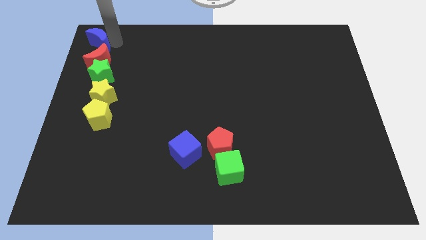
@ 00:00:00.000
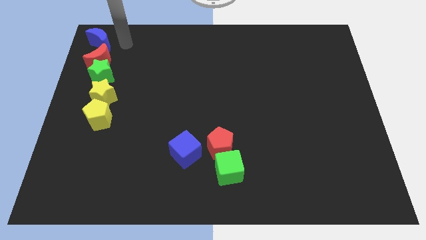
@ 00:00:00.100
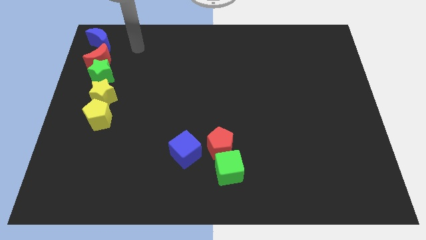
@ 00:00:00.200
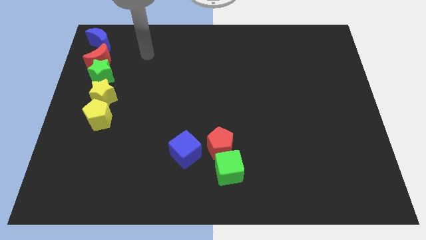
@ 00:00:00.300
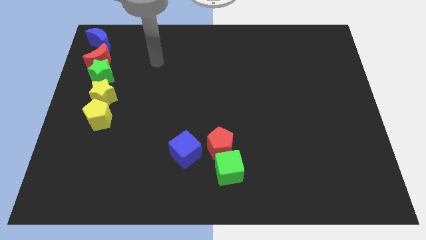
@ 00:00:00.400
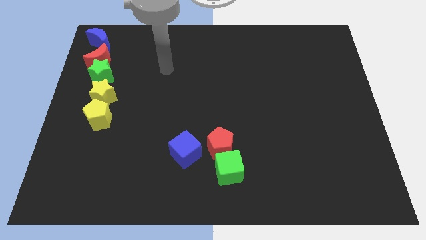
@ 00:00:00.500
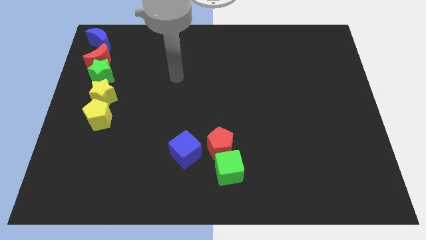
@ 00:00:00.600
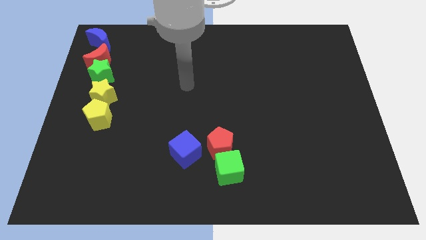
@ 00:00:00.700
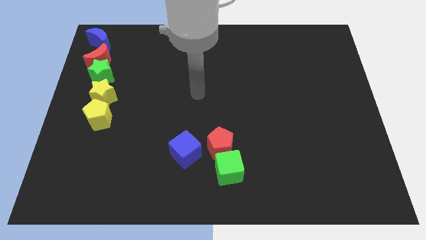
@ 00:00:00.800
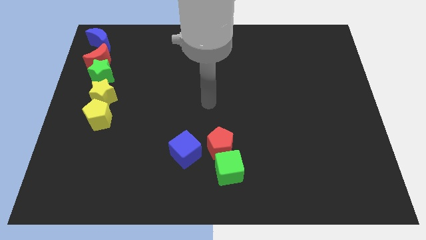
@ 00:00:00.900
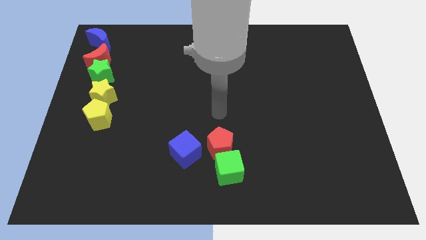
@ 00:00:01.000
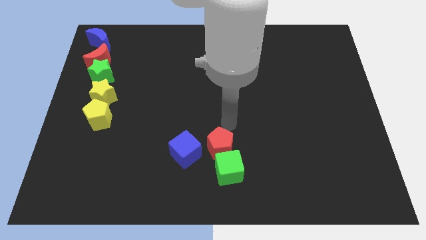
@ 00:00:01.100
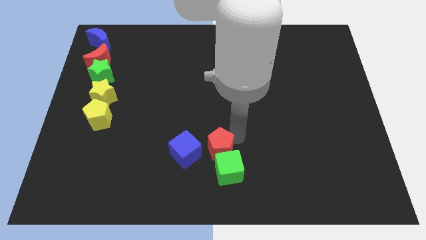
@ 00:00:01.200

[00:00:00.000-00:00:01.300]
move your arm away from the blue crescent

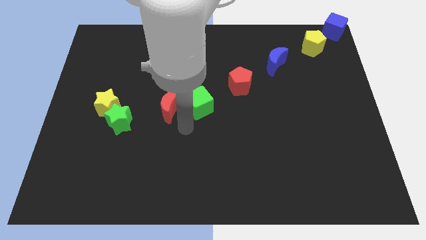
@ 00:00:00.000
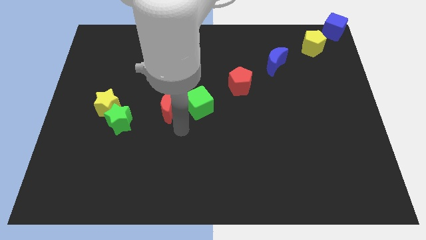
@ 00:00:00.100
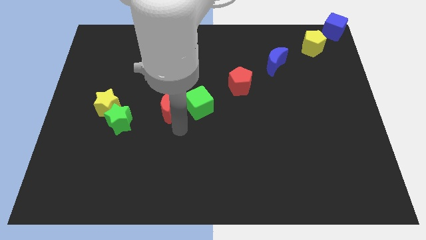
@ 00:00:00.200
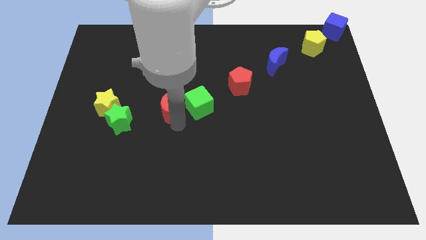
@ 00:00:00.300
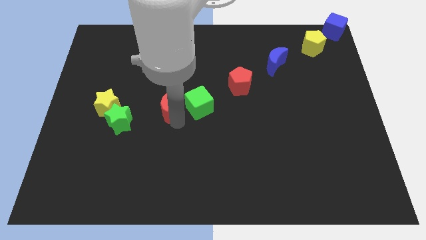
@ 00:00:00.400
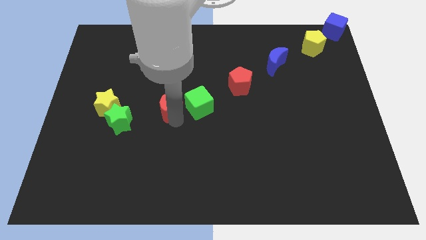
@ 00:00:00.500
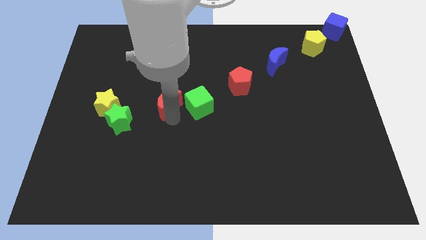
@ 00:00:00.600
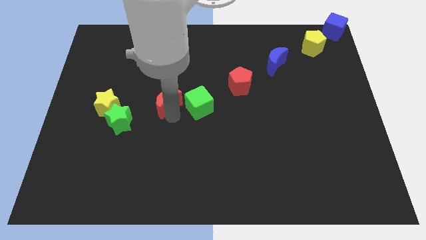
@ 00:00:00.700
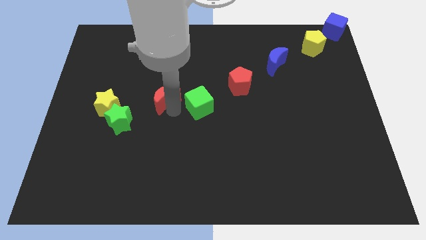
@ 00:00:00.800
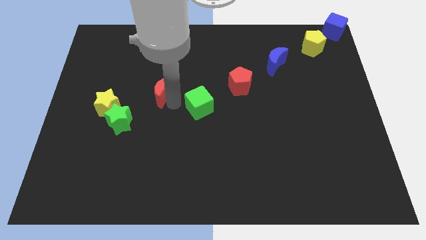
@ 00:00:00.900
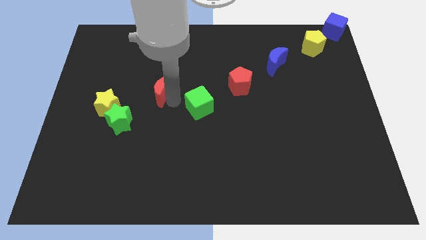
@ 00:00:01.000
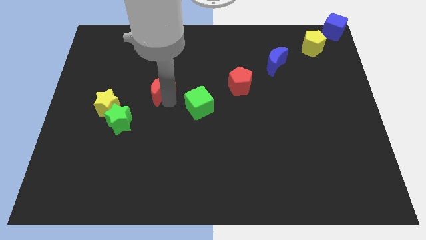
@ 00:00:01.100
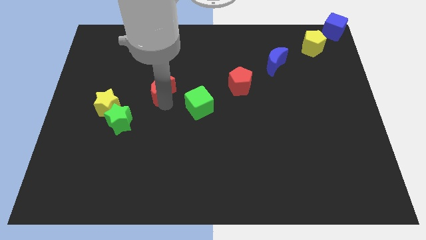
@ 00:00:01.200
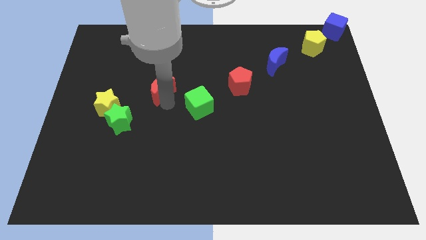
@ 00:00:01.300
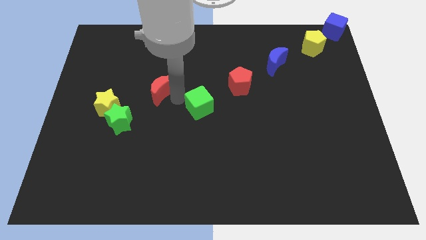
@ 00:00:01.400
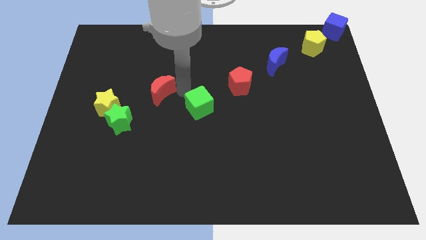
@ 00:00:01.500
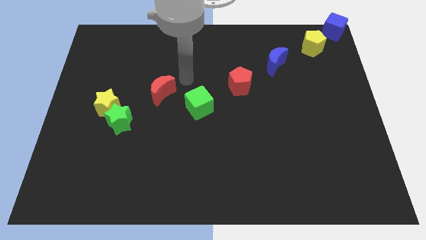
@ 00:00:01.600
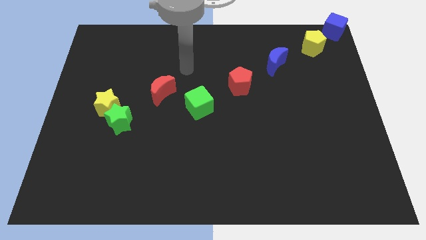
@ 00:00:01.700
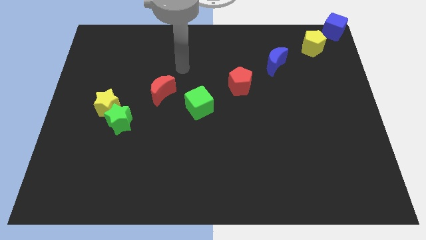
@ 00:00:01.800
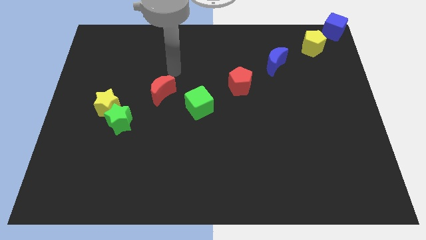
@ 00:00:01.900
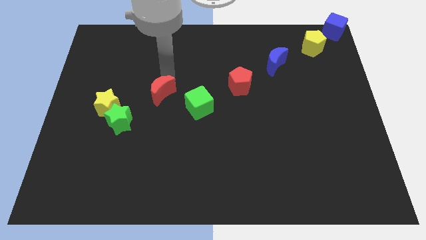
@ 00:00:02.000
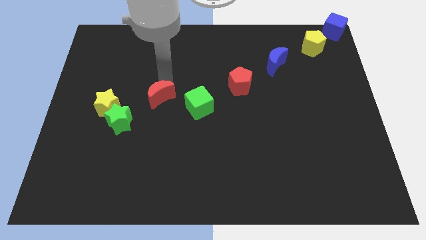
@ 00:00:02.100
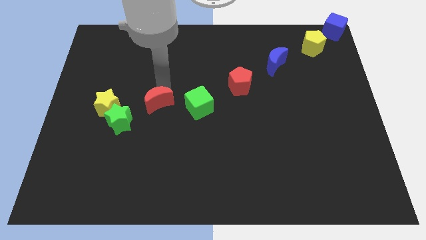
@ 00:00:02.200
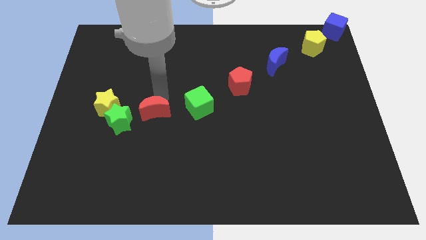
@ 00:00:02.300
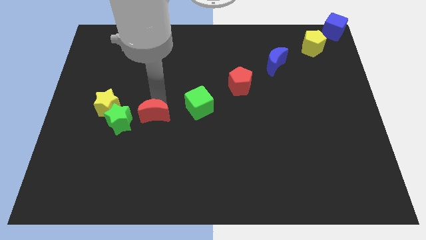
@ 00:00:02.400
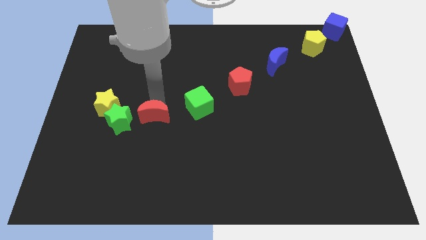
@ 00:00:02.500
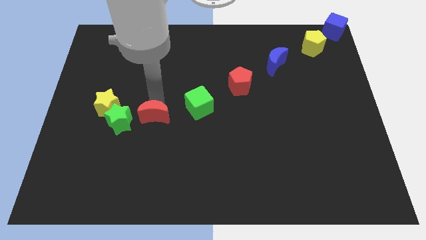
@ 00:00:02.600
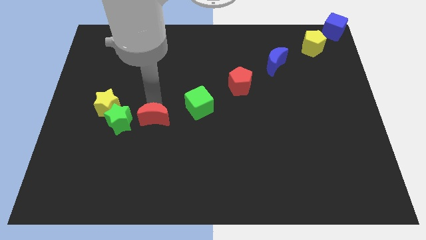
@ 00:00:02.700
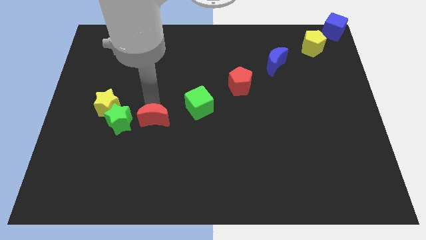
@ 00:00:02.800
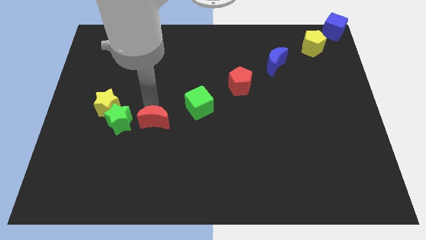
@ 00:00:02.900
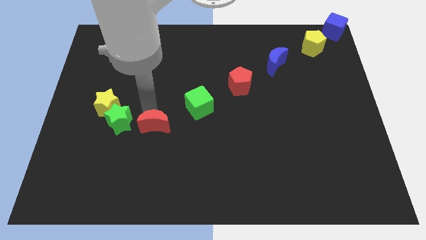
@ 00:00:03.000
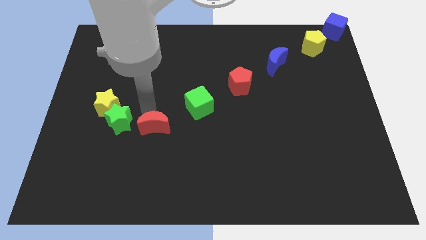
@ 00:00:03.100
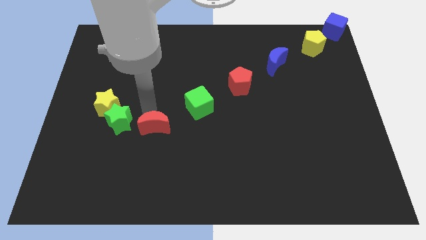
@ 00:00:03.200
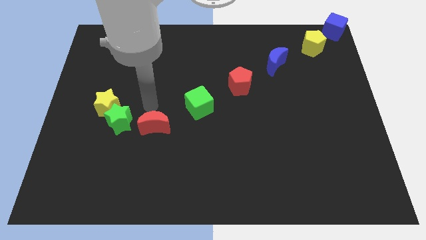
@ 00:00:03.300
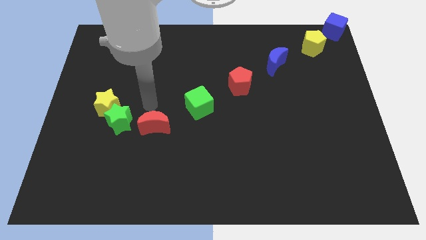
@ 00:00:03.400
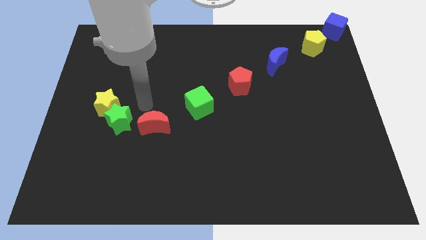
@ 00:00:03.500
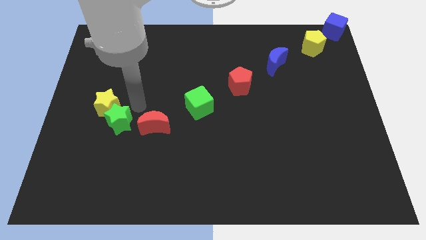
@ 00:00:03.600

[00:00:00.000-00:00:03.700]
move the red crescent right to the green star

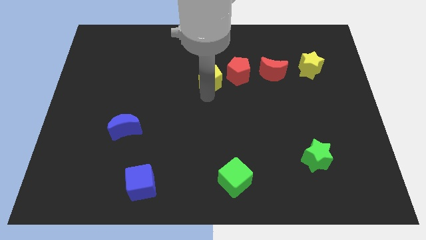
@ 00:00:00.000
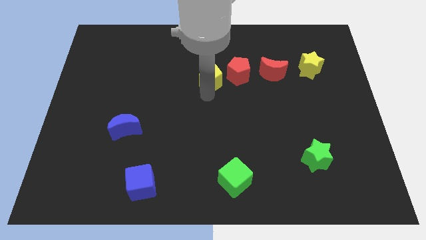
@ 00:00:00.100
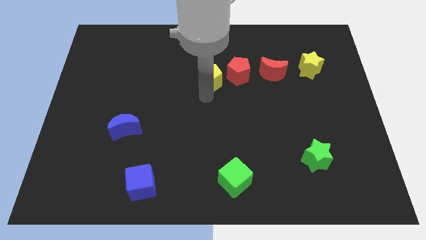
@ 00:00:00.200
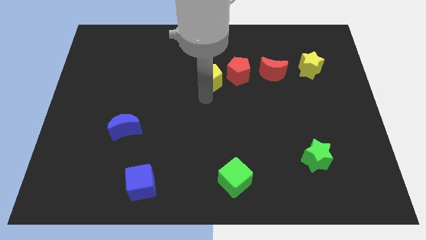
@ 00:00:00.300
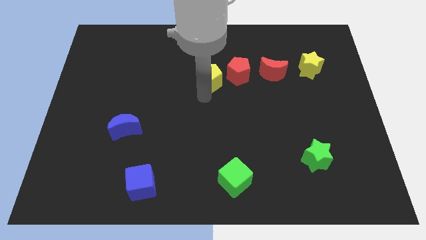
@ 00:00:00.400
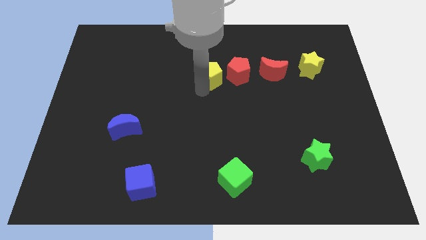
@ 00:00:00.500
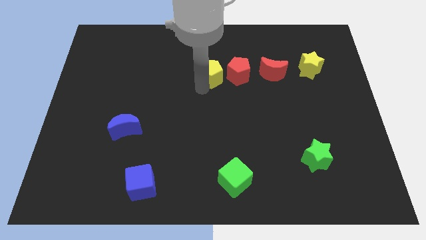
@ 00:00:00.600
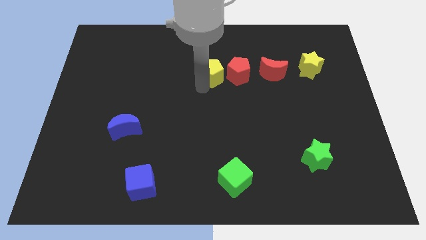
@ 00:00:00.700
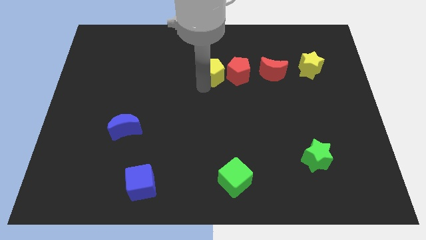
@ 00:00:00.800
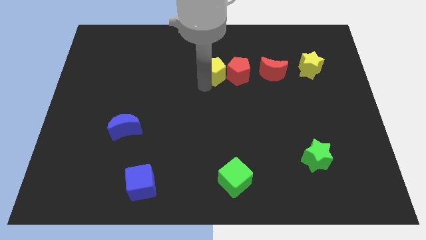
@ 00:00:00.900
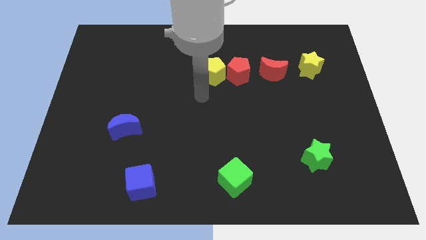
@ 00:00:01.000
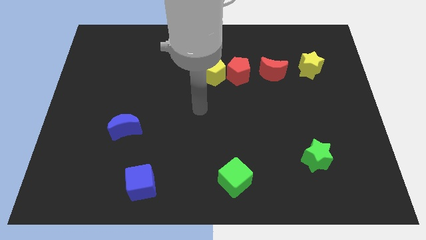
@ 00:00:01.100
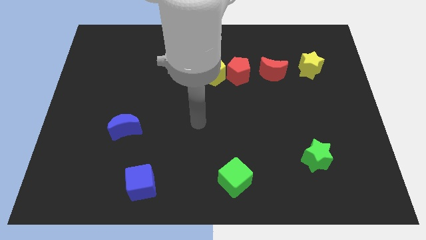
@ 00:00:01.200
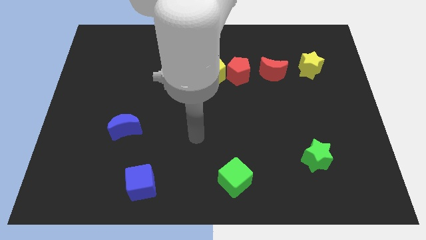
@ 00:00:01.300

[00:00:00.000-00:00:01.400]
place the yellow pentagon on the left side of the red pentagon

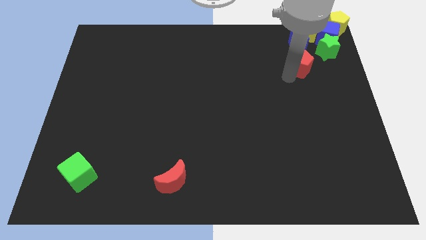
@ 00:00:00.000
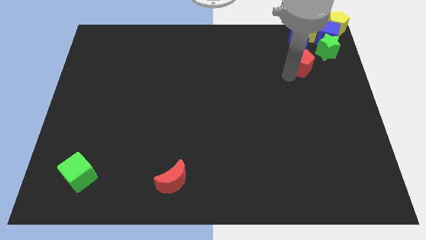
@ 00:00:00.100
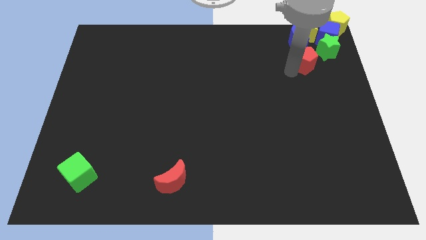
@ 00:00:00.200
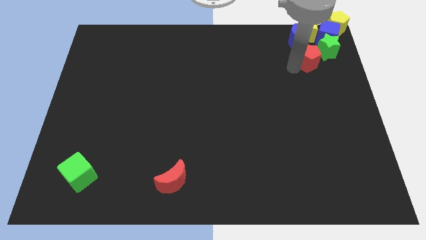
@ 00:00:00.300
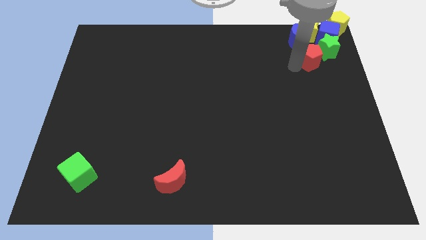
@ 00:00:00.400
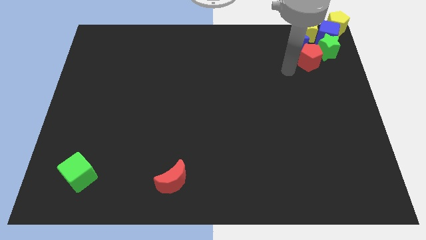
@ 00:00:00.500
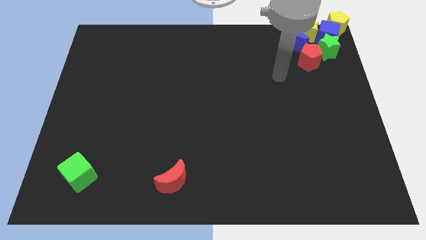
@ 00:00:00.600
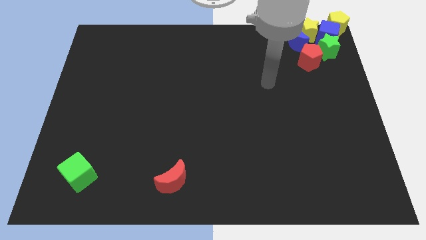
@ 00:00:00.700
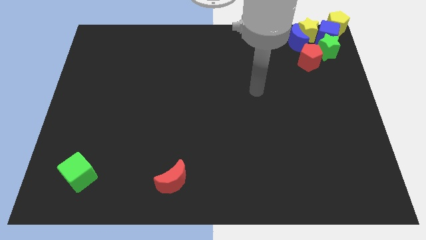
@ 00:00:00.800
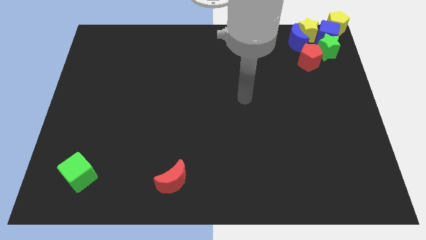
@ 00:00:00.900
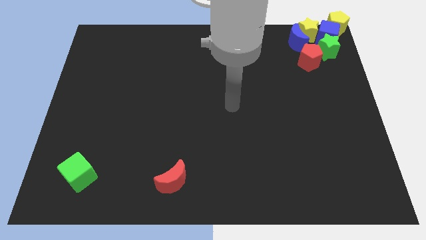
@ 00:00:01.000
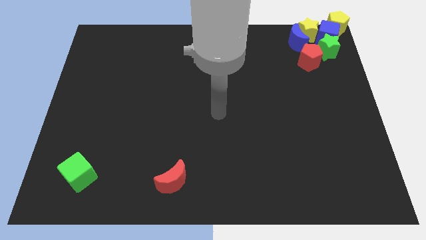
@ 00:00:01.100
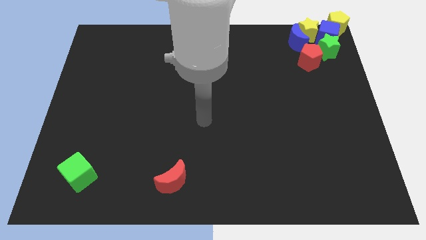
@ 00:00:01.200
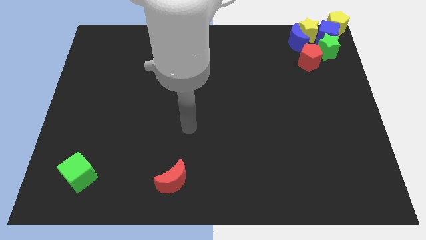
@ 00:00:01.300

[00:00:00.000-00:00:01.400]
move the red pentagon close to the green star

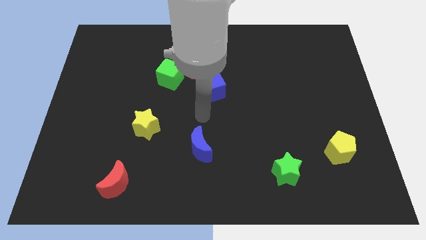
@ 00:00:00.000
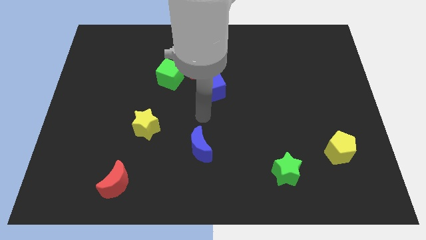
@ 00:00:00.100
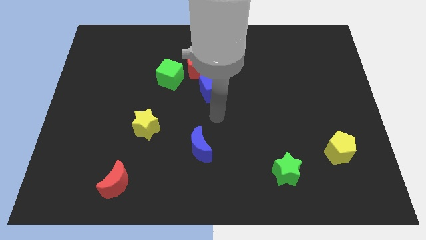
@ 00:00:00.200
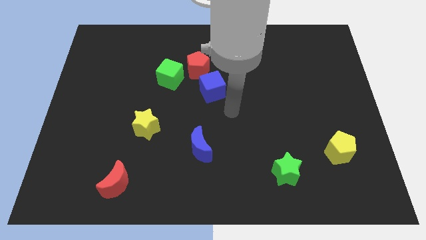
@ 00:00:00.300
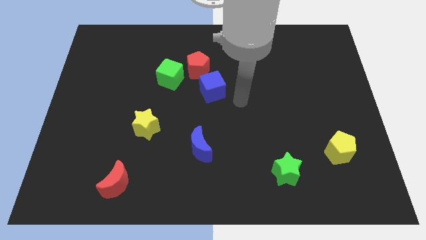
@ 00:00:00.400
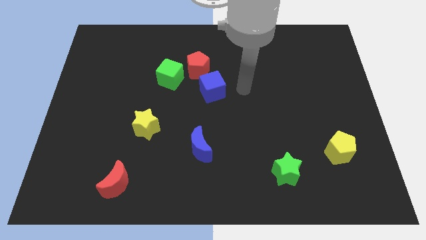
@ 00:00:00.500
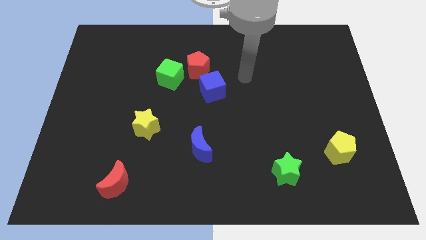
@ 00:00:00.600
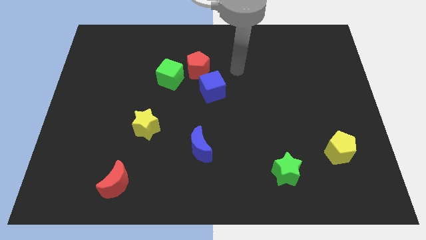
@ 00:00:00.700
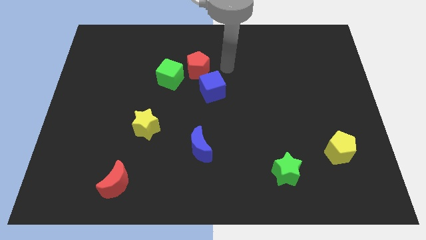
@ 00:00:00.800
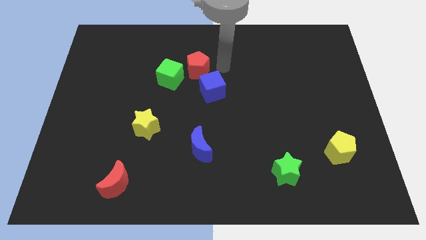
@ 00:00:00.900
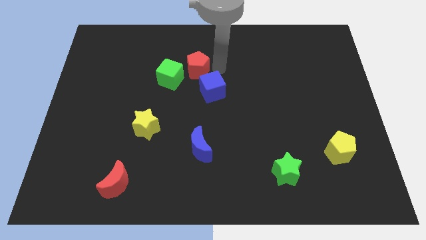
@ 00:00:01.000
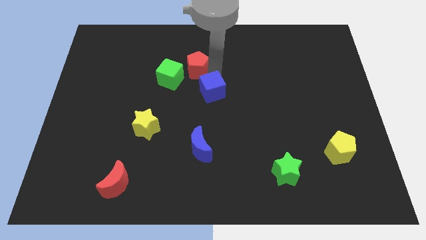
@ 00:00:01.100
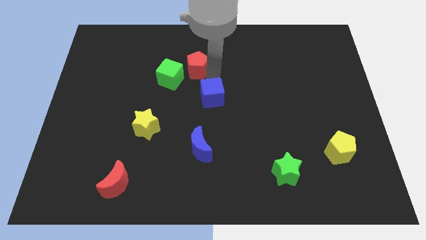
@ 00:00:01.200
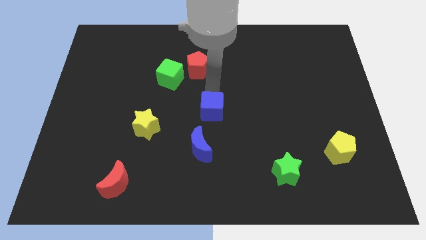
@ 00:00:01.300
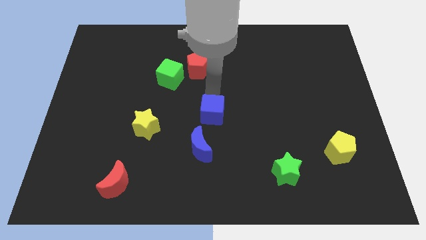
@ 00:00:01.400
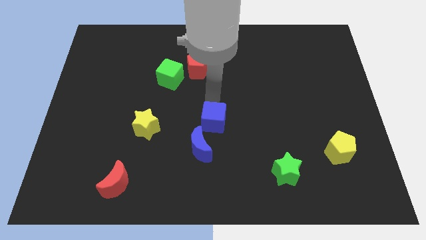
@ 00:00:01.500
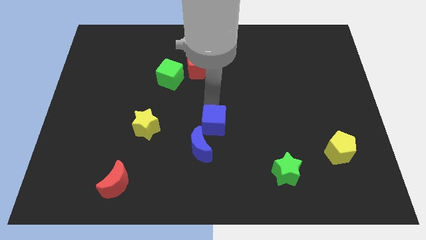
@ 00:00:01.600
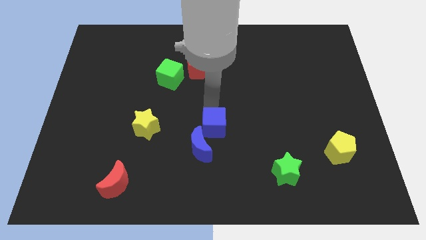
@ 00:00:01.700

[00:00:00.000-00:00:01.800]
push the blue cube towards the blue crescent
